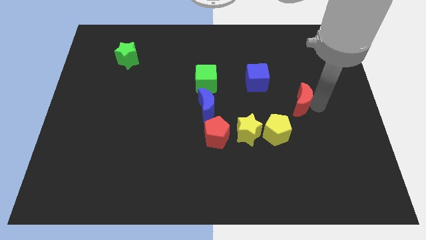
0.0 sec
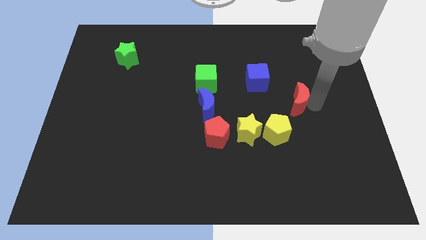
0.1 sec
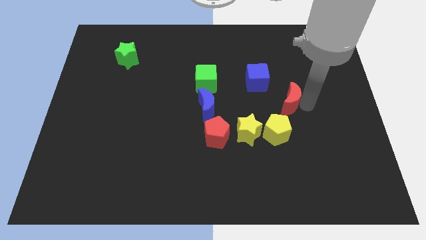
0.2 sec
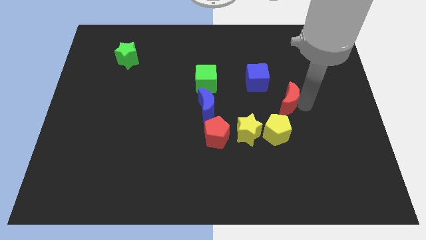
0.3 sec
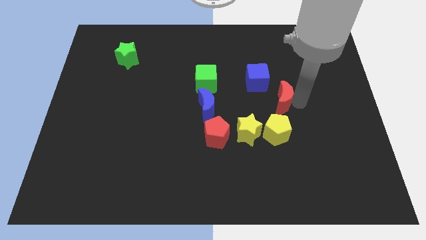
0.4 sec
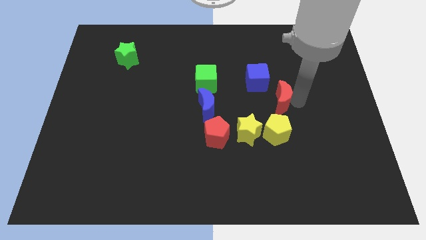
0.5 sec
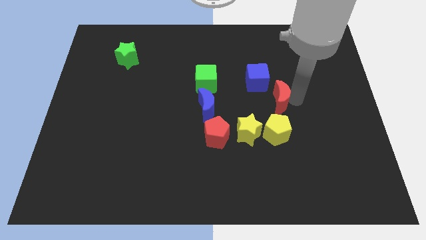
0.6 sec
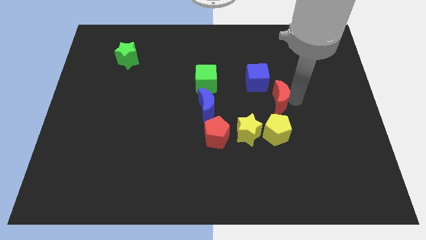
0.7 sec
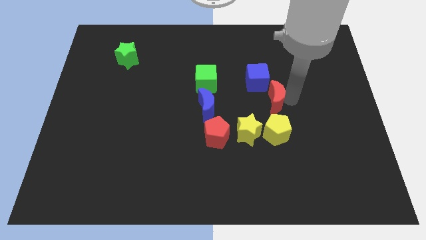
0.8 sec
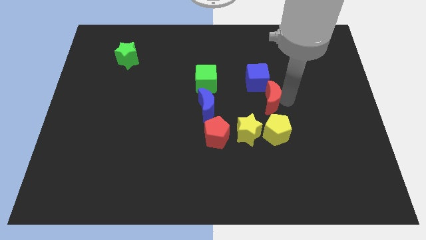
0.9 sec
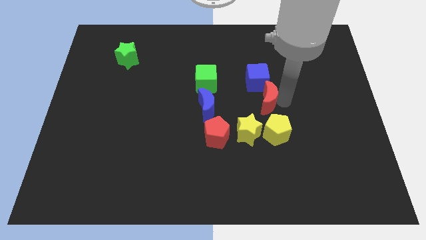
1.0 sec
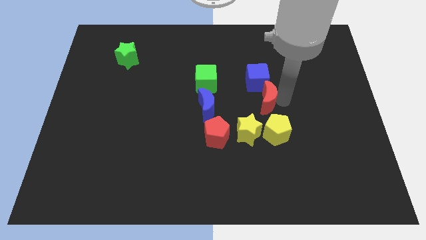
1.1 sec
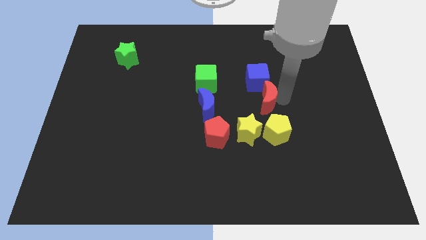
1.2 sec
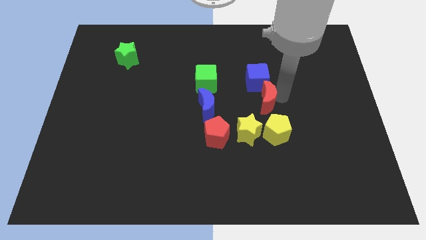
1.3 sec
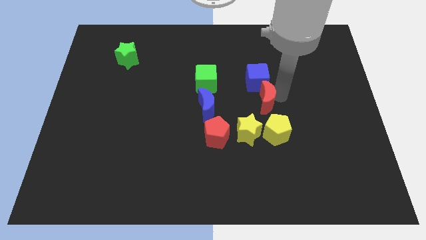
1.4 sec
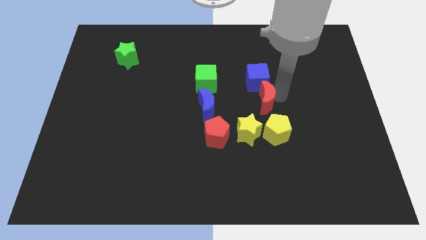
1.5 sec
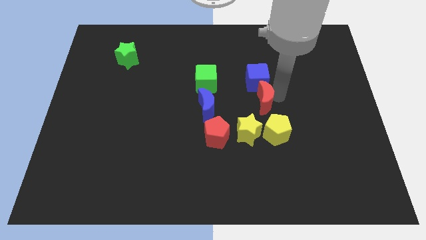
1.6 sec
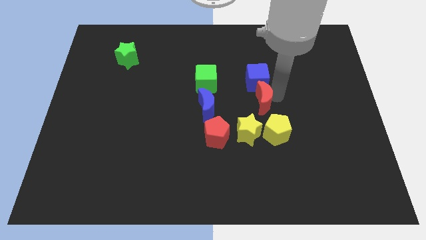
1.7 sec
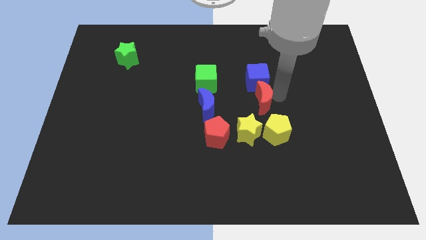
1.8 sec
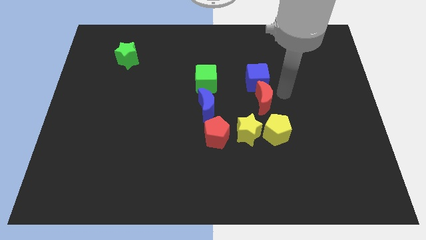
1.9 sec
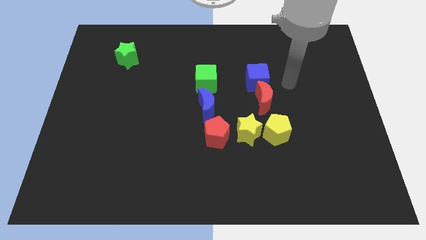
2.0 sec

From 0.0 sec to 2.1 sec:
move the red moon at the bottom of the blue cube

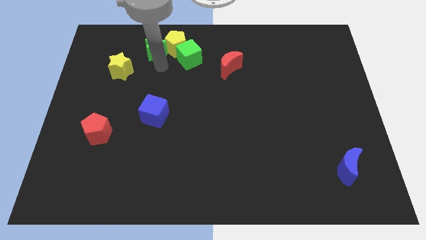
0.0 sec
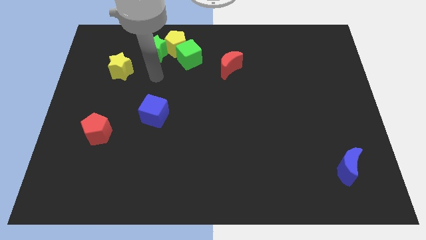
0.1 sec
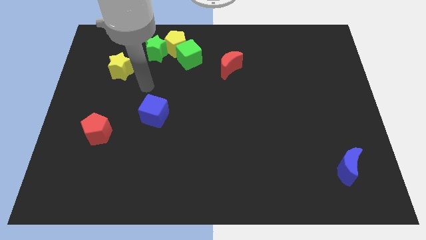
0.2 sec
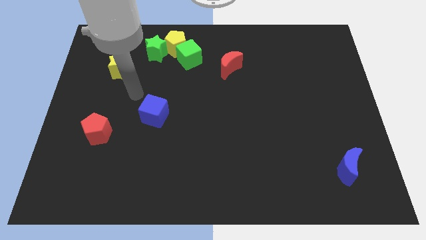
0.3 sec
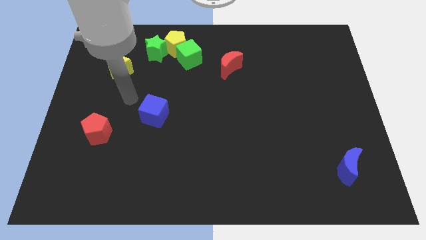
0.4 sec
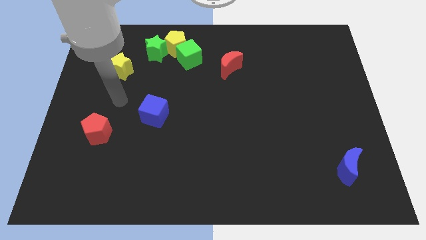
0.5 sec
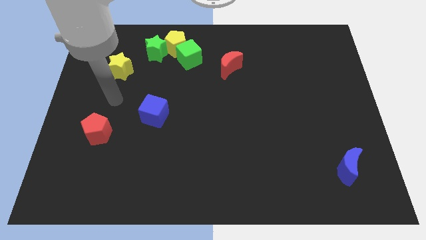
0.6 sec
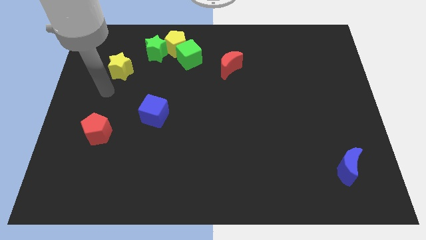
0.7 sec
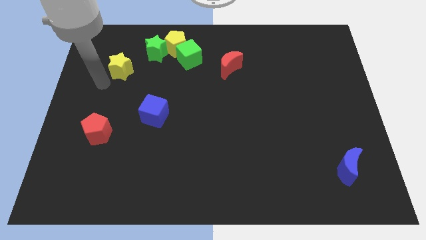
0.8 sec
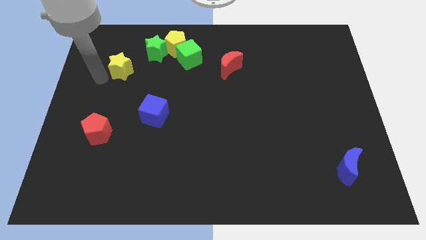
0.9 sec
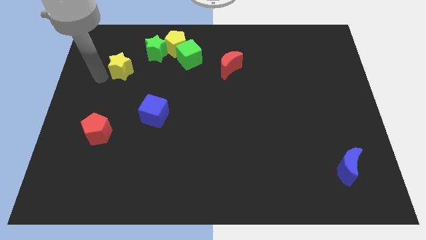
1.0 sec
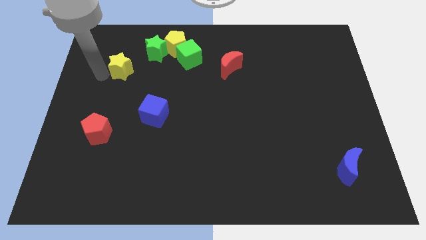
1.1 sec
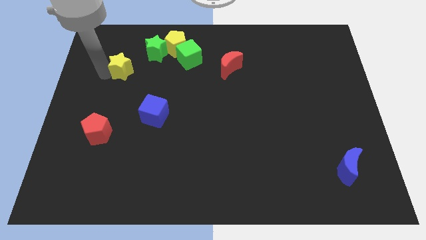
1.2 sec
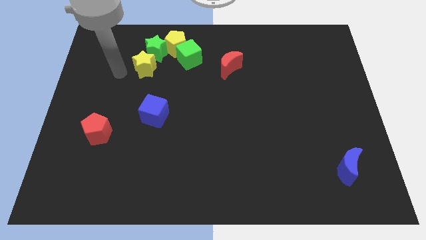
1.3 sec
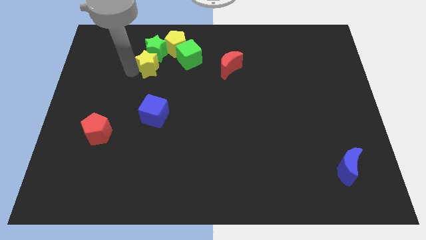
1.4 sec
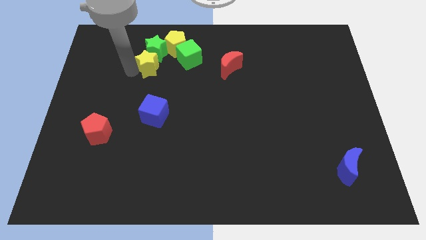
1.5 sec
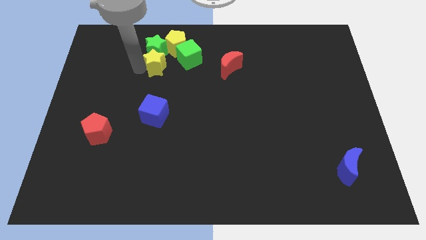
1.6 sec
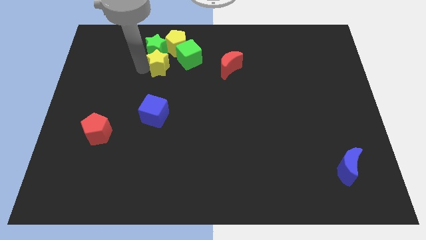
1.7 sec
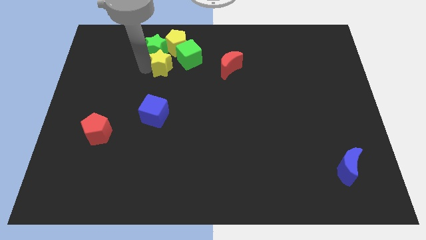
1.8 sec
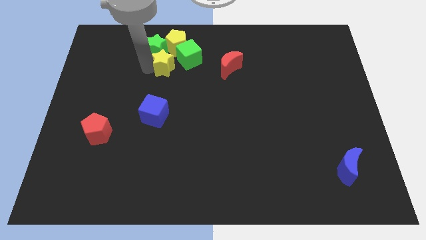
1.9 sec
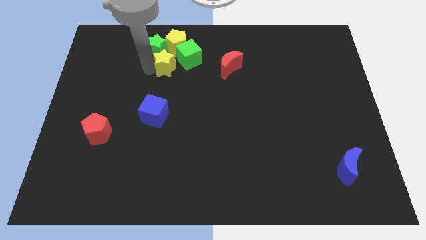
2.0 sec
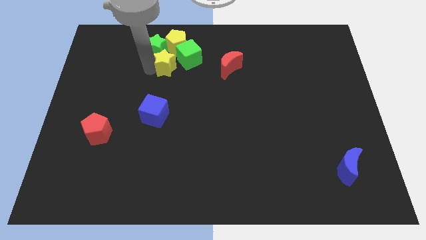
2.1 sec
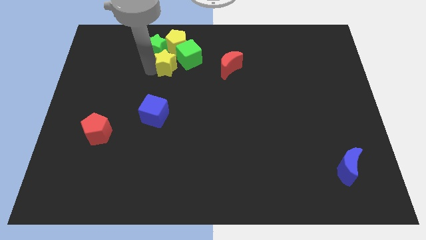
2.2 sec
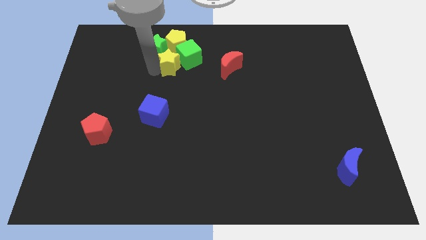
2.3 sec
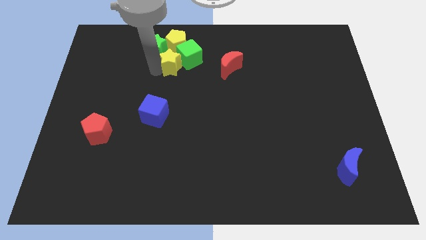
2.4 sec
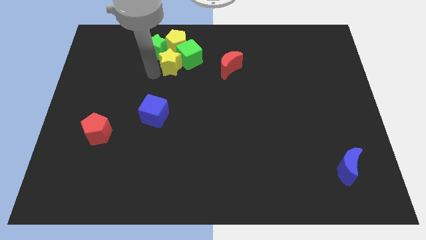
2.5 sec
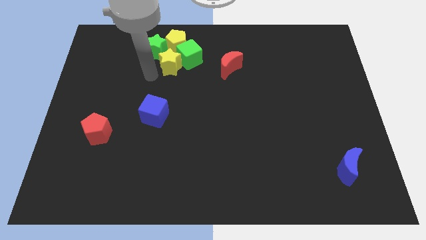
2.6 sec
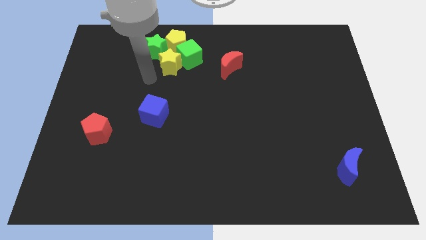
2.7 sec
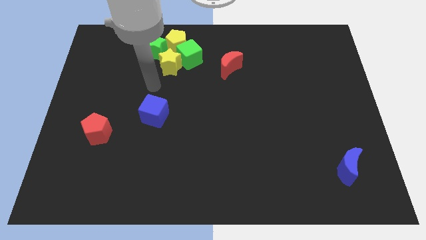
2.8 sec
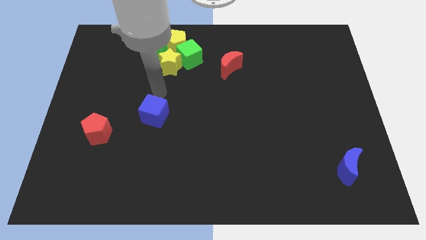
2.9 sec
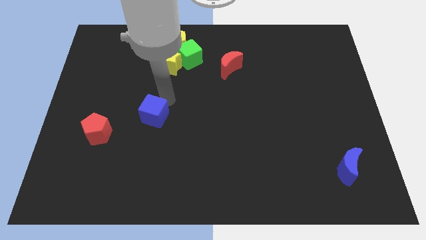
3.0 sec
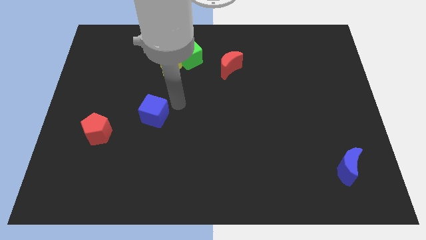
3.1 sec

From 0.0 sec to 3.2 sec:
push the yellow star to the bottom of the yellow pentagon

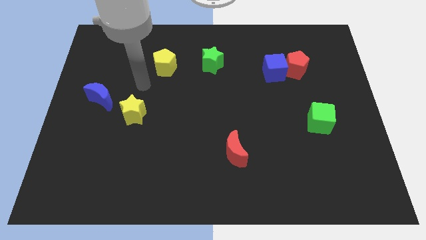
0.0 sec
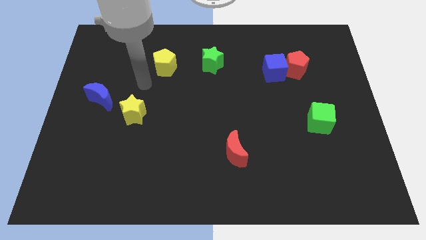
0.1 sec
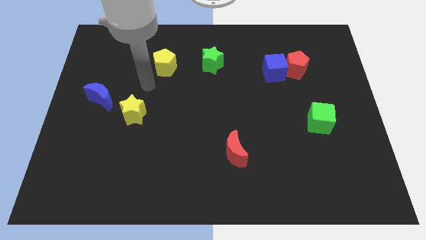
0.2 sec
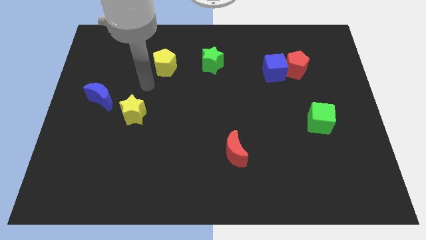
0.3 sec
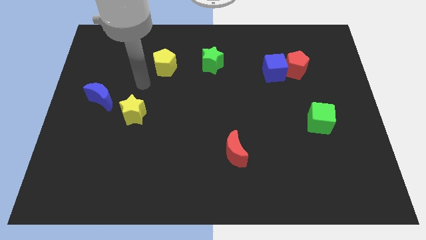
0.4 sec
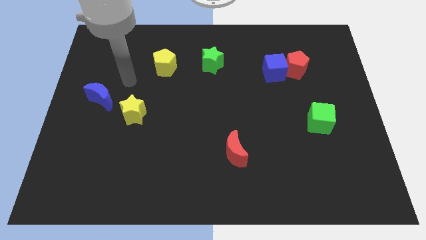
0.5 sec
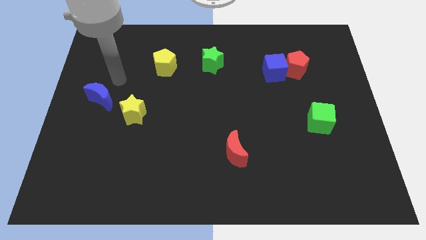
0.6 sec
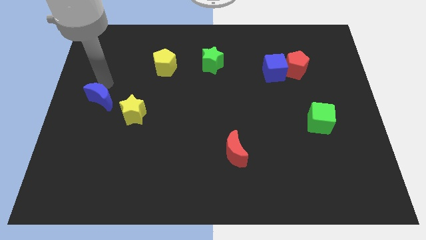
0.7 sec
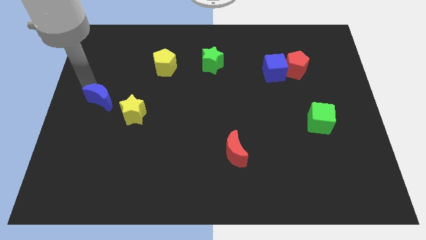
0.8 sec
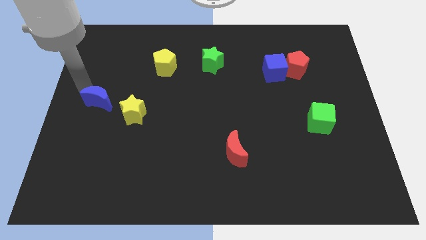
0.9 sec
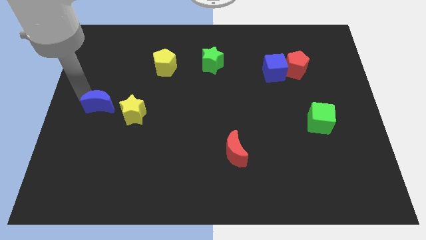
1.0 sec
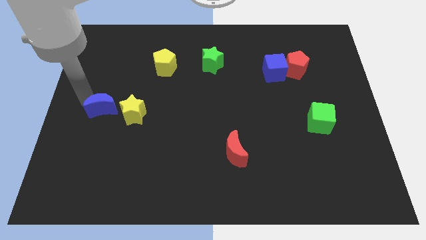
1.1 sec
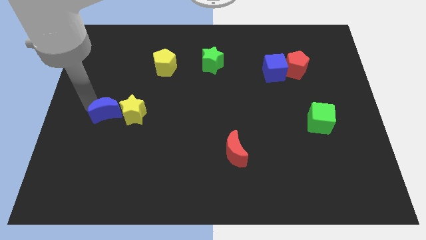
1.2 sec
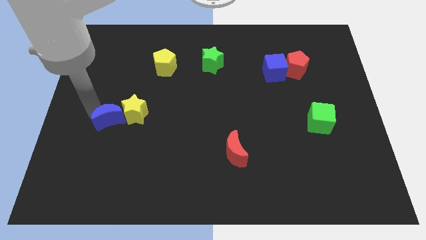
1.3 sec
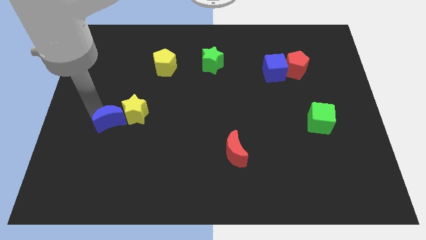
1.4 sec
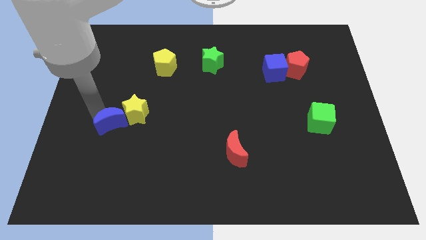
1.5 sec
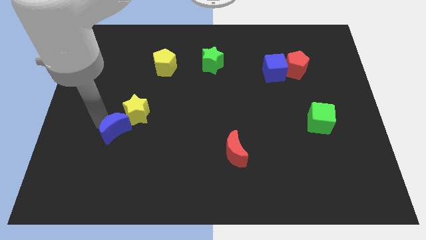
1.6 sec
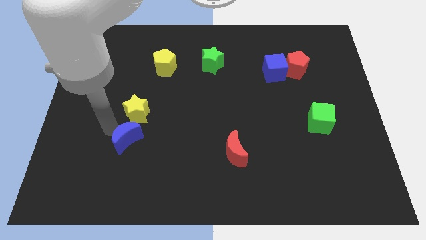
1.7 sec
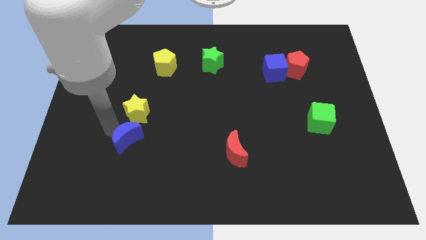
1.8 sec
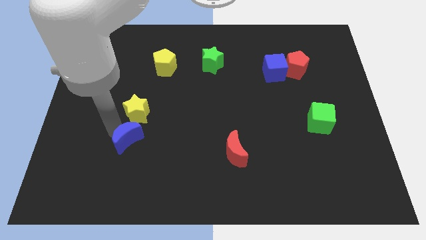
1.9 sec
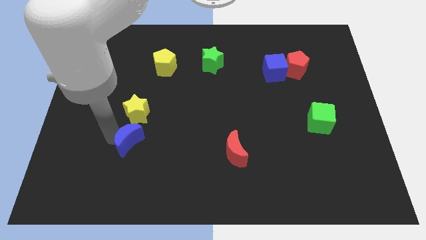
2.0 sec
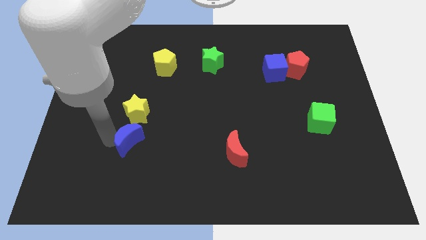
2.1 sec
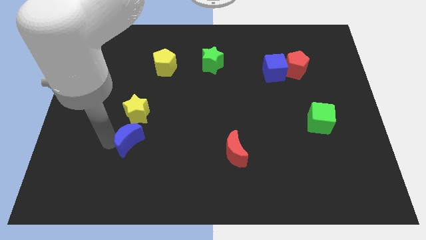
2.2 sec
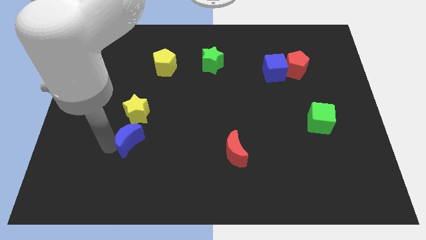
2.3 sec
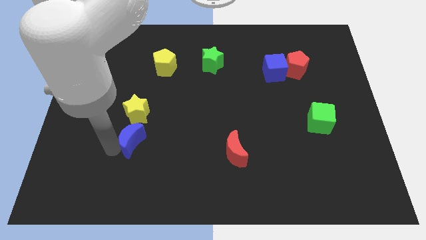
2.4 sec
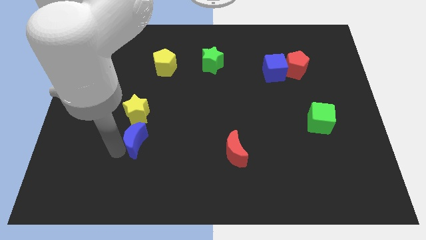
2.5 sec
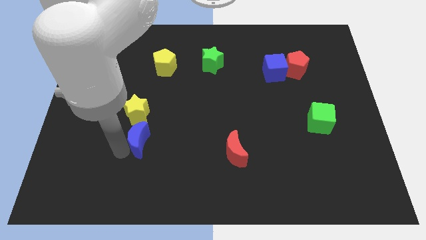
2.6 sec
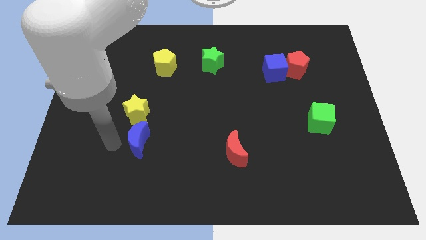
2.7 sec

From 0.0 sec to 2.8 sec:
push the blue crescent to the bottom of yellow star

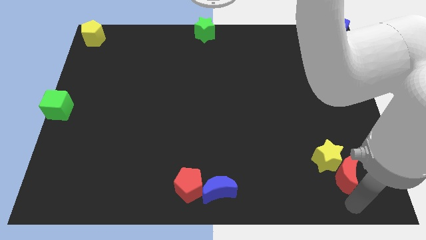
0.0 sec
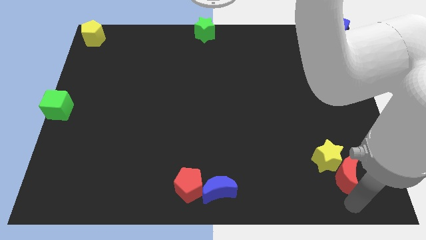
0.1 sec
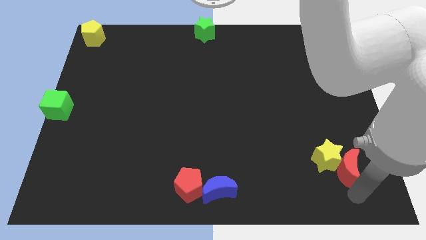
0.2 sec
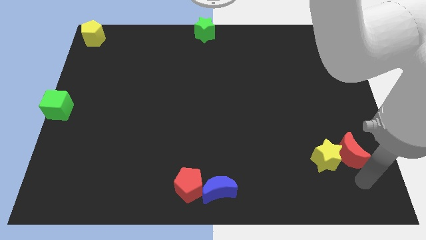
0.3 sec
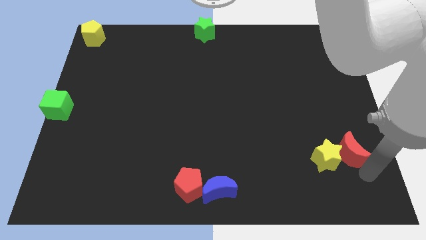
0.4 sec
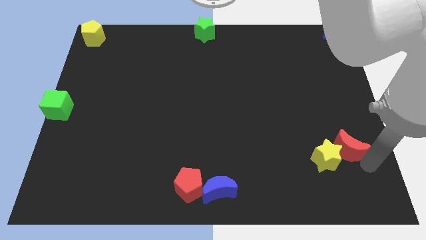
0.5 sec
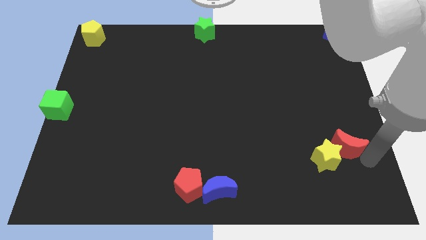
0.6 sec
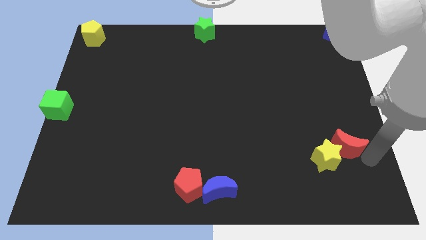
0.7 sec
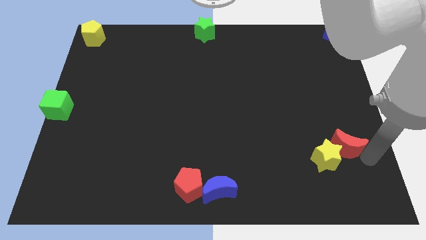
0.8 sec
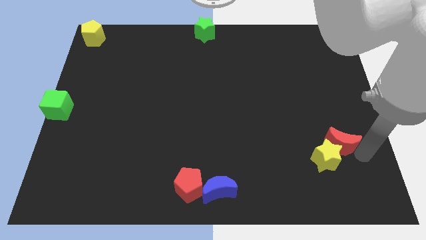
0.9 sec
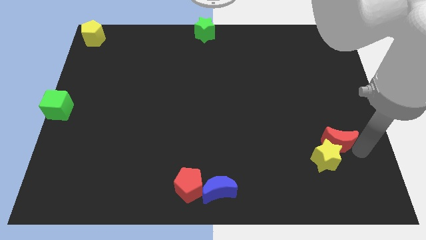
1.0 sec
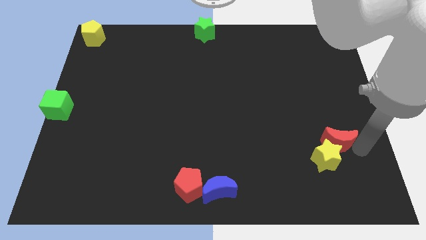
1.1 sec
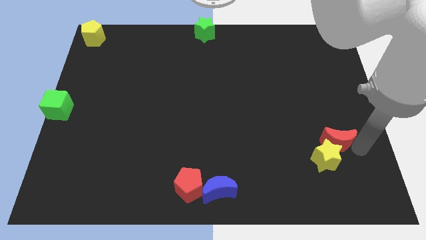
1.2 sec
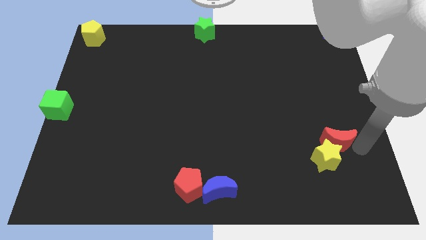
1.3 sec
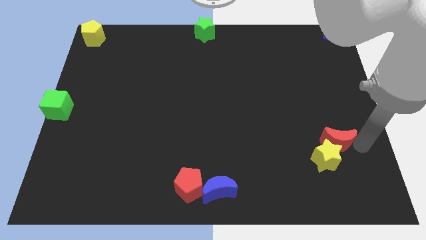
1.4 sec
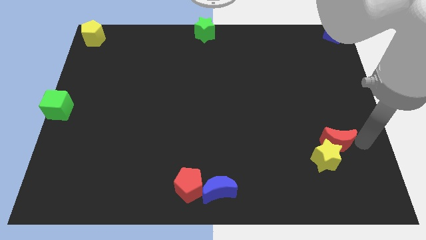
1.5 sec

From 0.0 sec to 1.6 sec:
place the red moon at the top of yellow star
